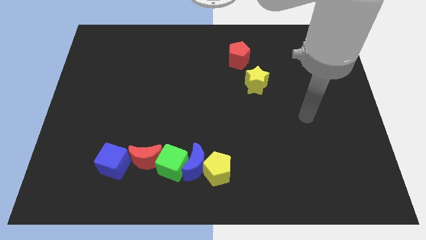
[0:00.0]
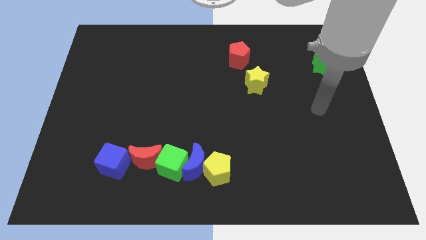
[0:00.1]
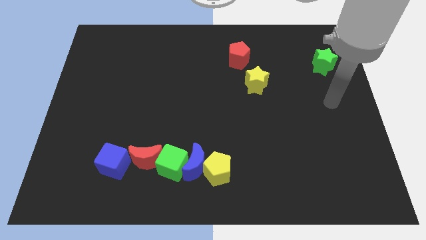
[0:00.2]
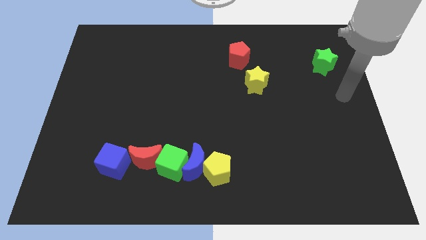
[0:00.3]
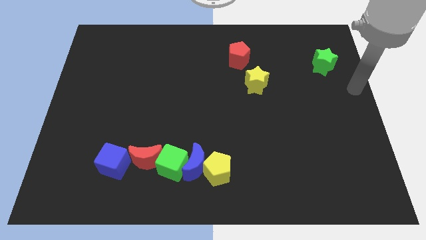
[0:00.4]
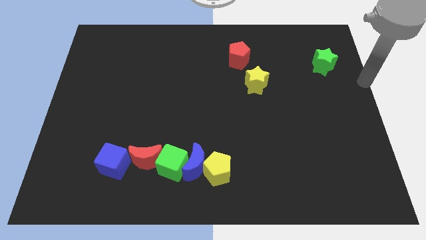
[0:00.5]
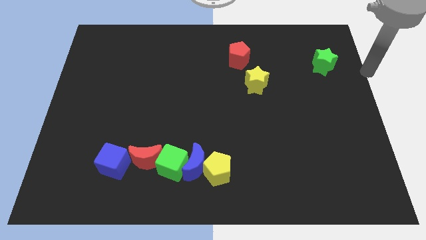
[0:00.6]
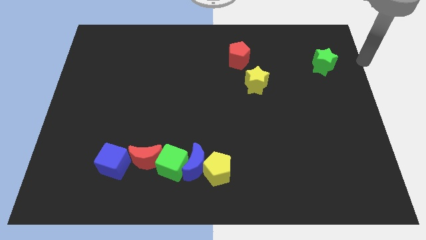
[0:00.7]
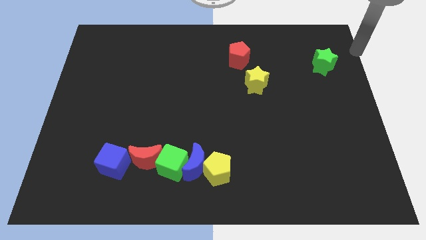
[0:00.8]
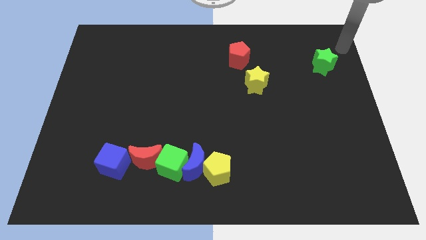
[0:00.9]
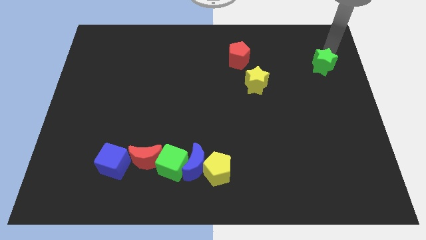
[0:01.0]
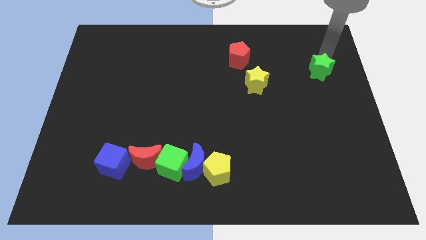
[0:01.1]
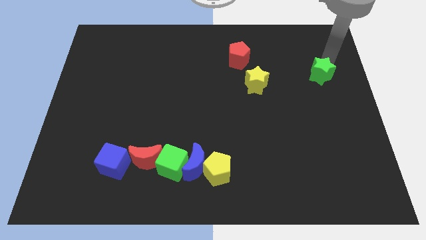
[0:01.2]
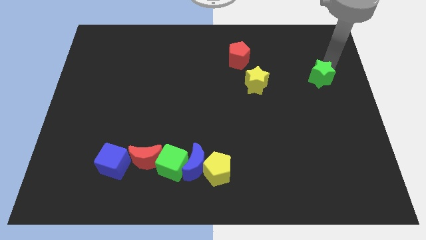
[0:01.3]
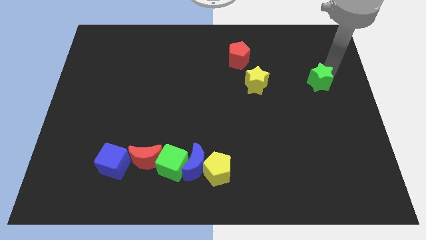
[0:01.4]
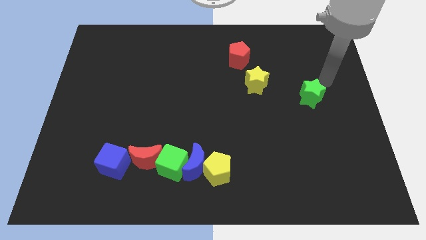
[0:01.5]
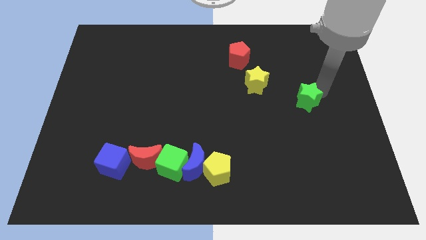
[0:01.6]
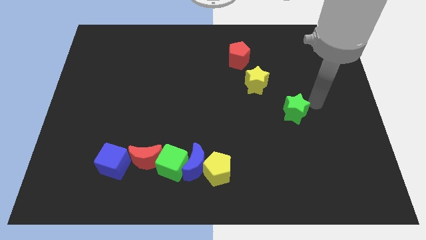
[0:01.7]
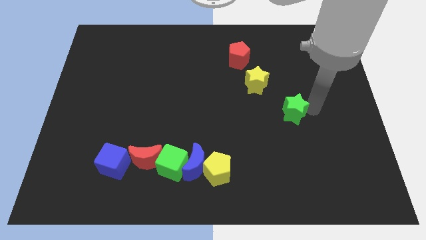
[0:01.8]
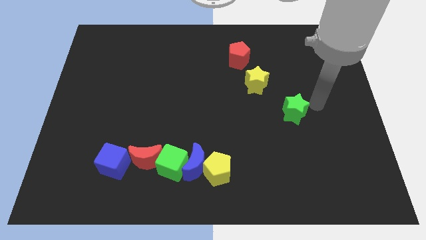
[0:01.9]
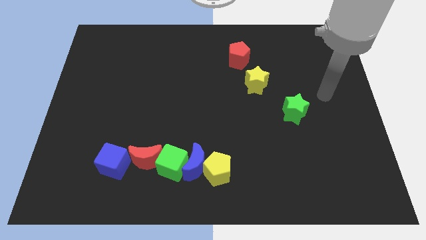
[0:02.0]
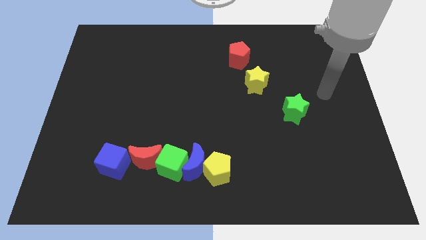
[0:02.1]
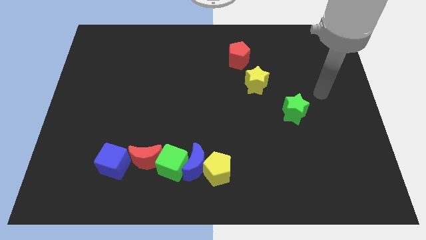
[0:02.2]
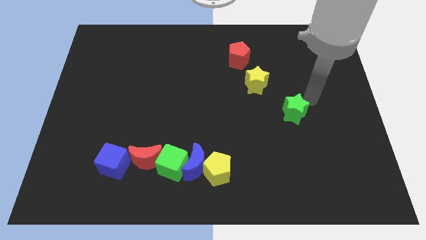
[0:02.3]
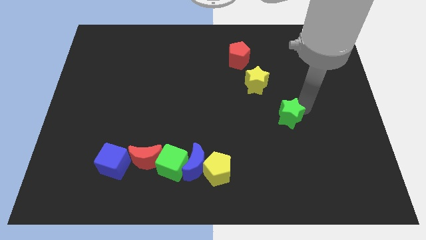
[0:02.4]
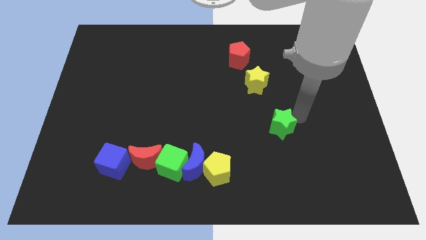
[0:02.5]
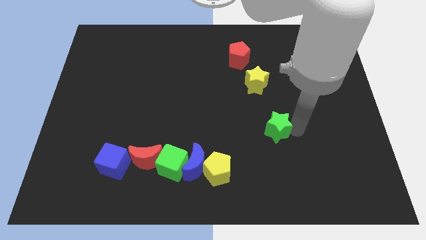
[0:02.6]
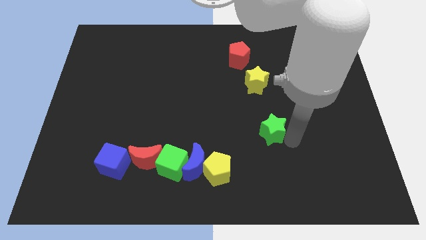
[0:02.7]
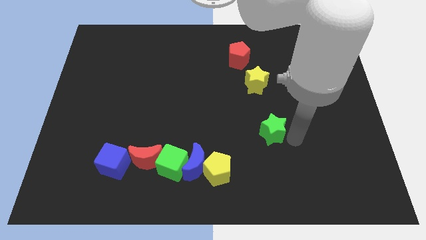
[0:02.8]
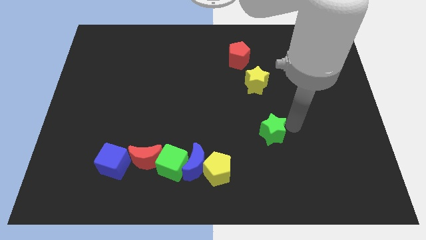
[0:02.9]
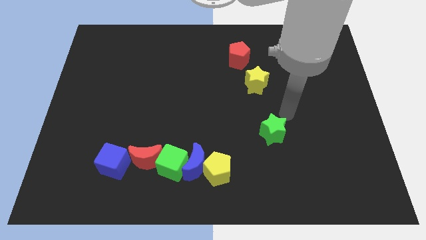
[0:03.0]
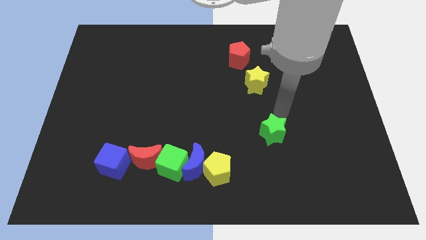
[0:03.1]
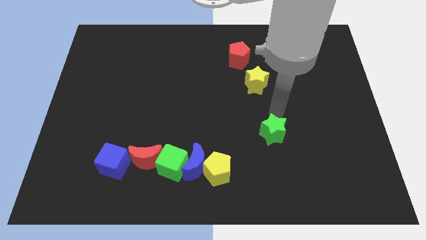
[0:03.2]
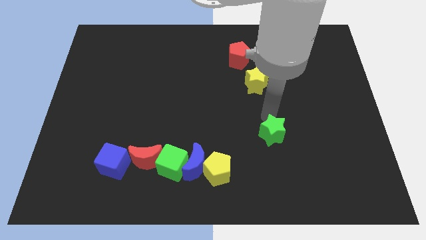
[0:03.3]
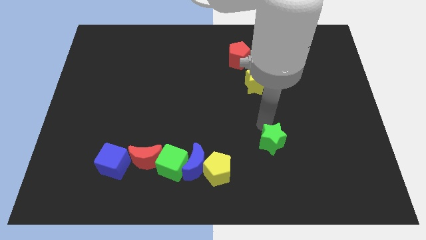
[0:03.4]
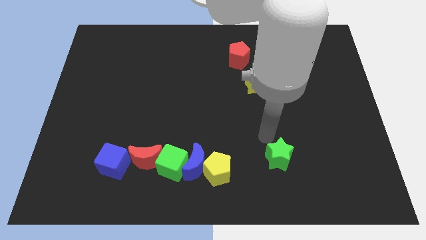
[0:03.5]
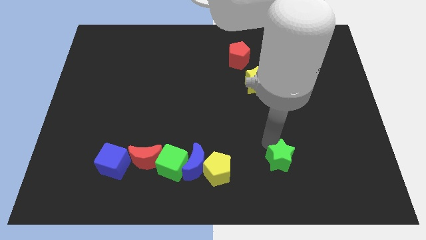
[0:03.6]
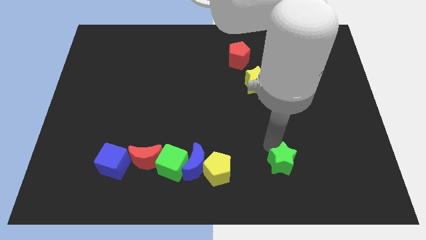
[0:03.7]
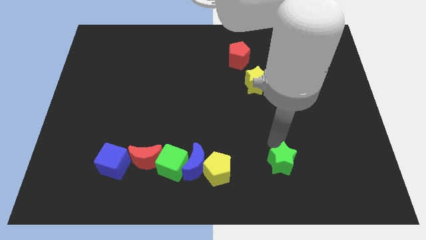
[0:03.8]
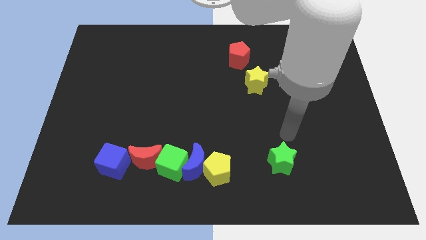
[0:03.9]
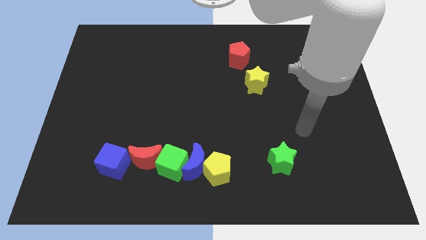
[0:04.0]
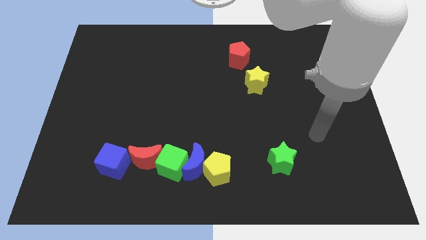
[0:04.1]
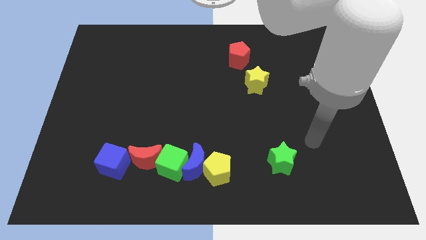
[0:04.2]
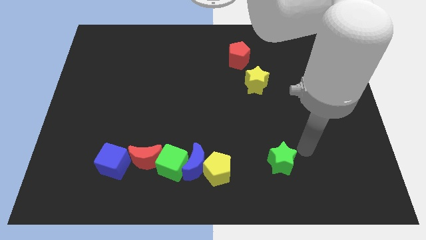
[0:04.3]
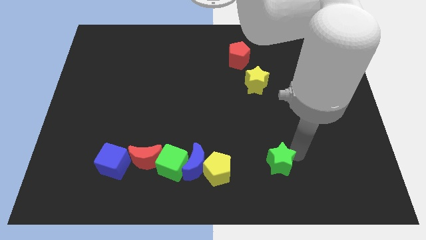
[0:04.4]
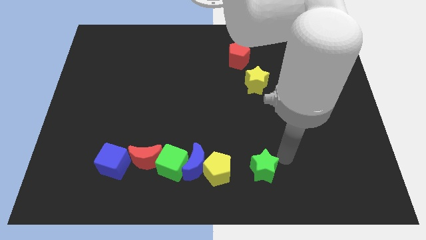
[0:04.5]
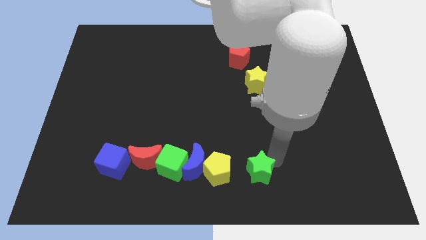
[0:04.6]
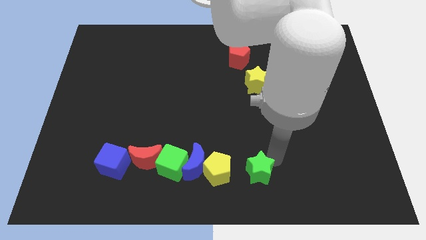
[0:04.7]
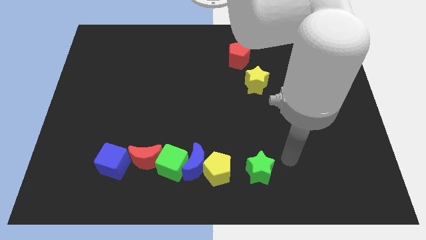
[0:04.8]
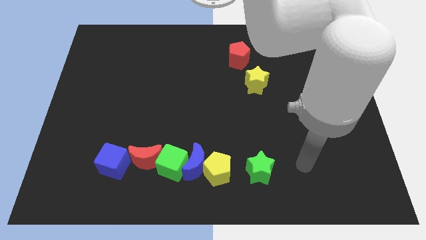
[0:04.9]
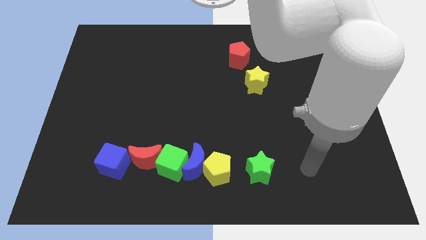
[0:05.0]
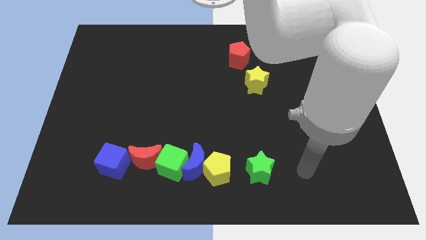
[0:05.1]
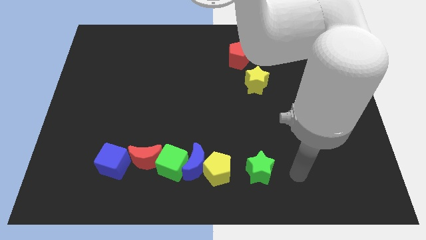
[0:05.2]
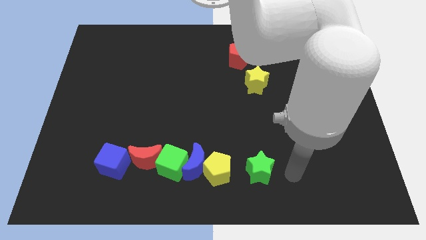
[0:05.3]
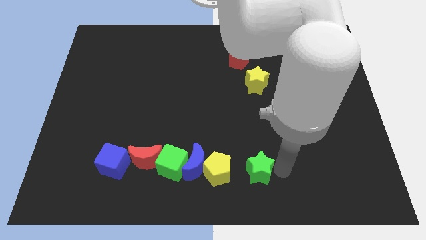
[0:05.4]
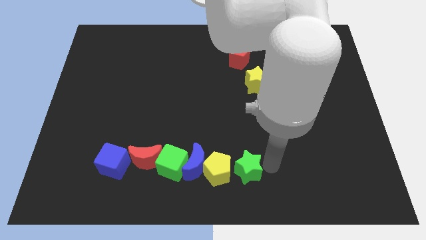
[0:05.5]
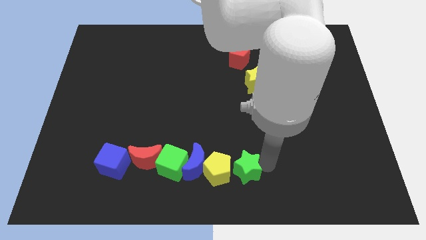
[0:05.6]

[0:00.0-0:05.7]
move the green star to the right side of the yellow pentagon

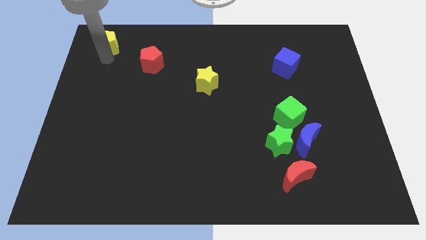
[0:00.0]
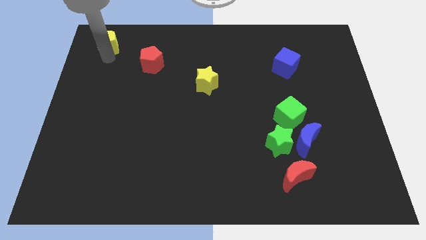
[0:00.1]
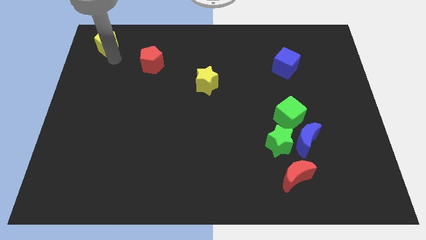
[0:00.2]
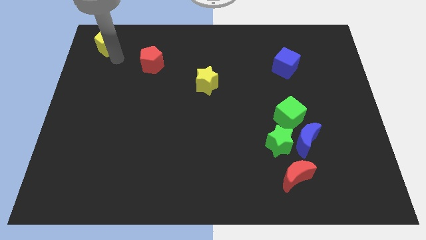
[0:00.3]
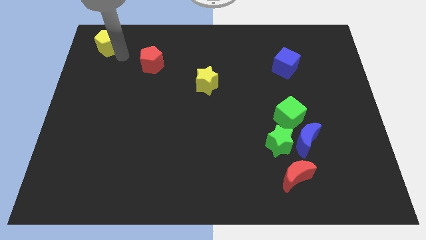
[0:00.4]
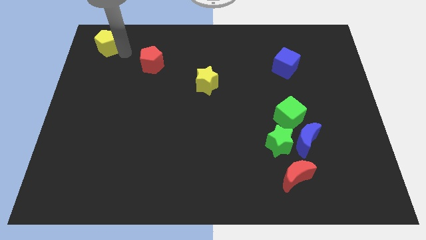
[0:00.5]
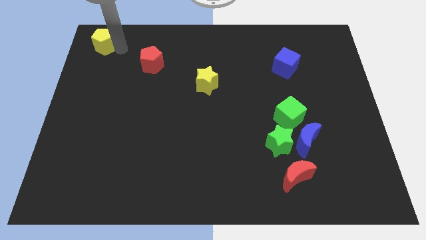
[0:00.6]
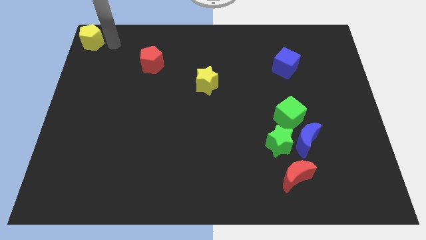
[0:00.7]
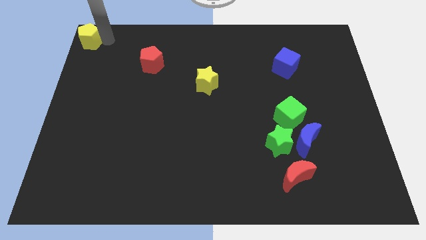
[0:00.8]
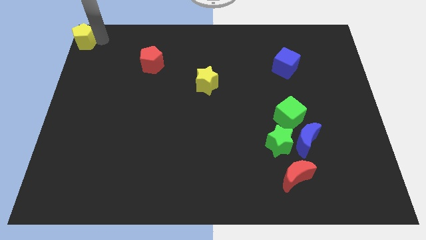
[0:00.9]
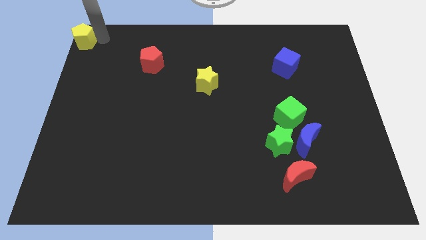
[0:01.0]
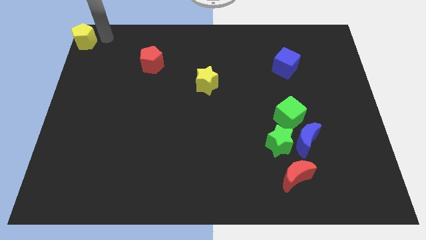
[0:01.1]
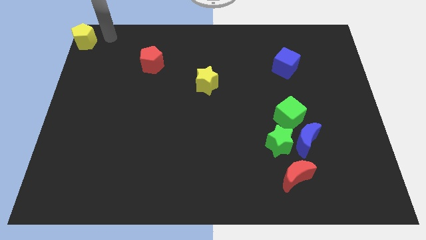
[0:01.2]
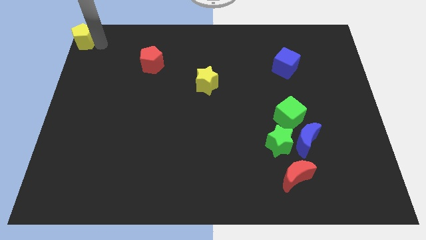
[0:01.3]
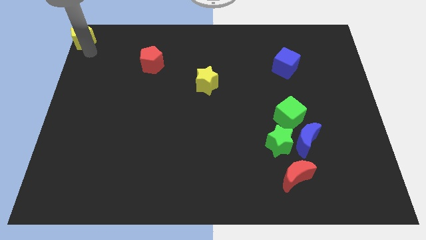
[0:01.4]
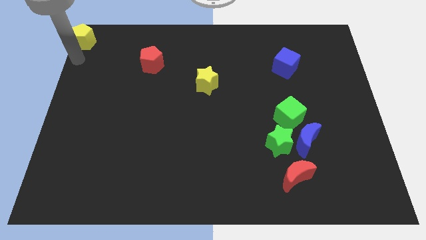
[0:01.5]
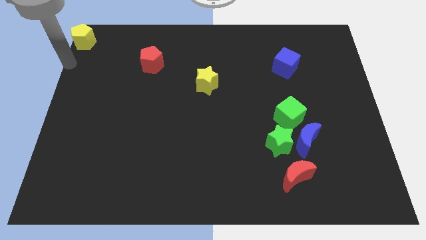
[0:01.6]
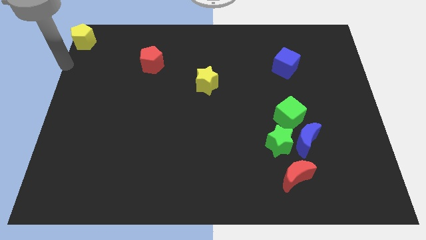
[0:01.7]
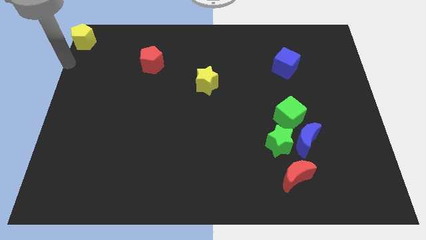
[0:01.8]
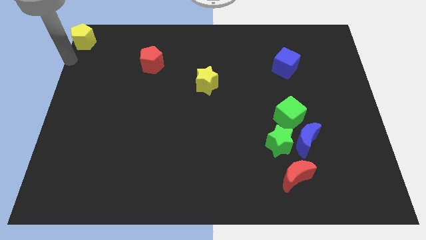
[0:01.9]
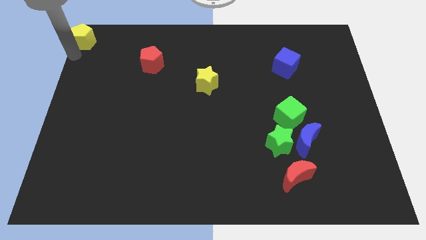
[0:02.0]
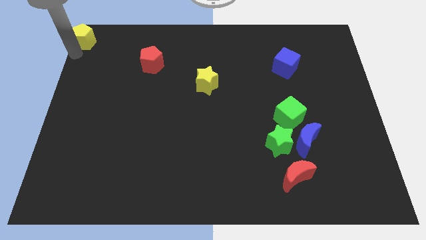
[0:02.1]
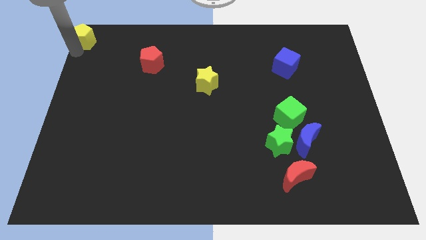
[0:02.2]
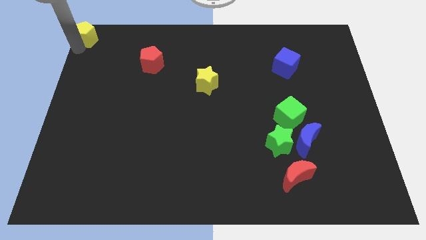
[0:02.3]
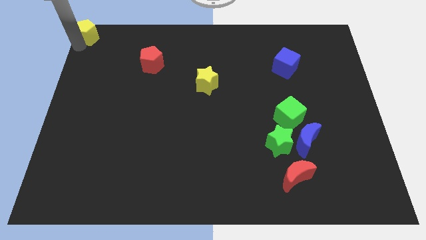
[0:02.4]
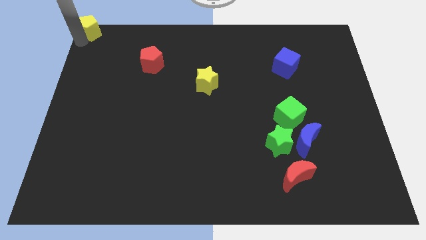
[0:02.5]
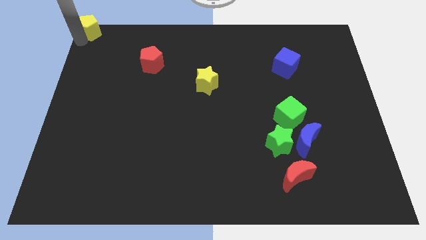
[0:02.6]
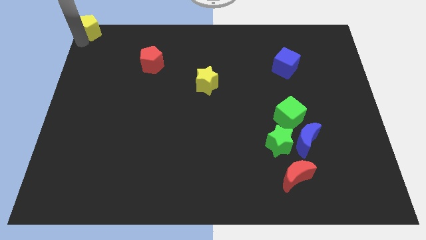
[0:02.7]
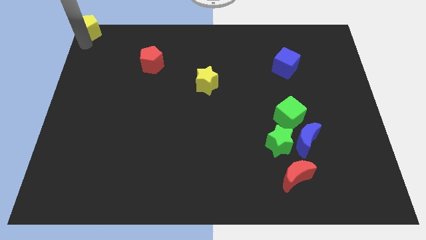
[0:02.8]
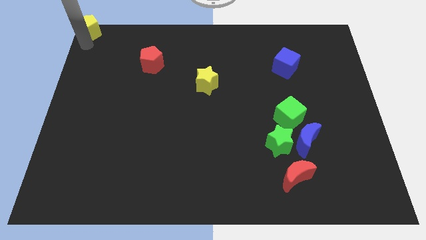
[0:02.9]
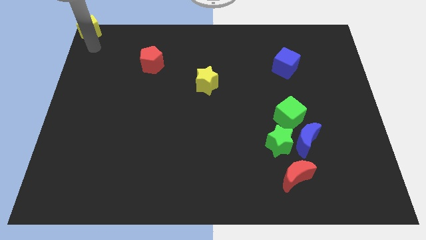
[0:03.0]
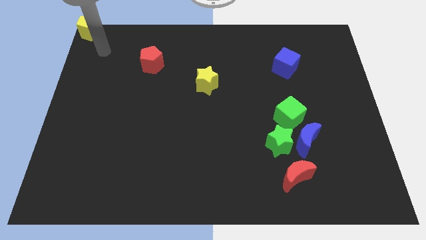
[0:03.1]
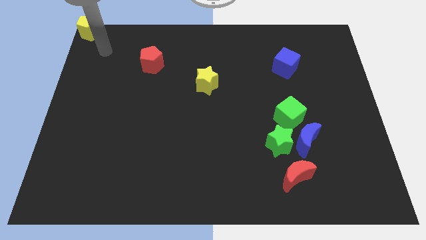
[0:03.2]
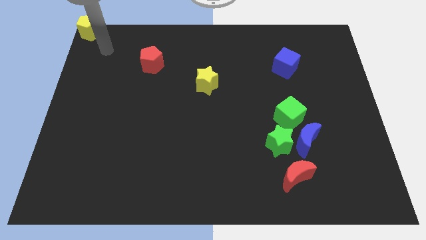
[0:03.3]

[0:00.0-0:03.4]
slightly push the yellow pentagon to the top left
